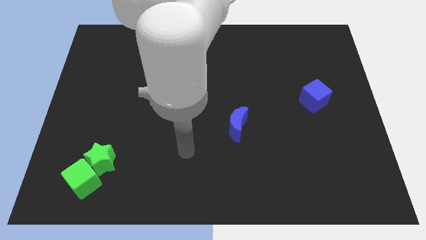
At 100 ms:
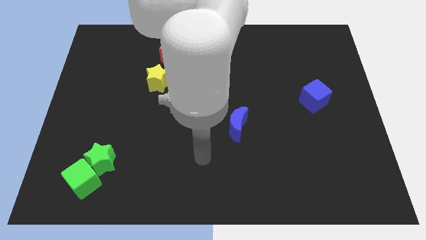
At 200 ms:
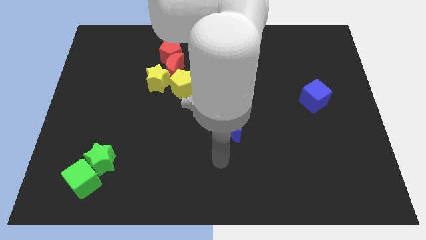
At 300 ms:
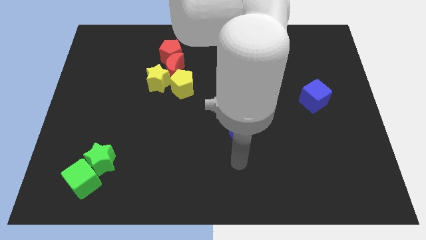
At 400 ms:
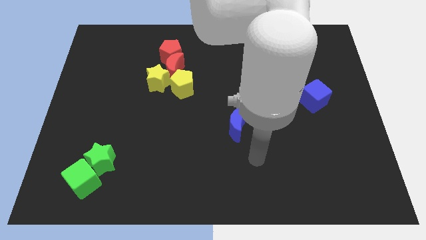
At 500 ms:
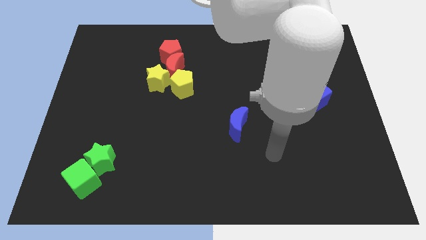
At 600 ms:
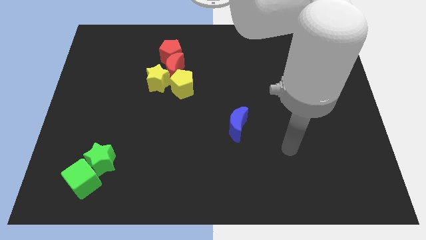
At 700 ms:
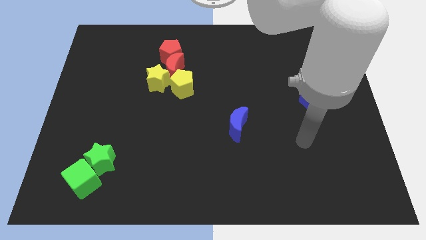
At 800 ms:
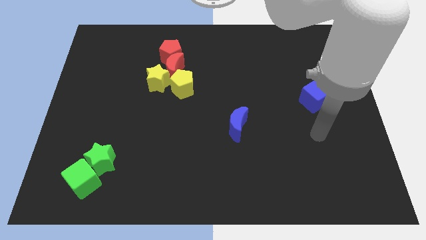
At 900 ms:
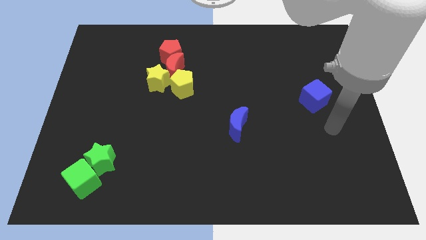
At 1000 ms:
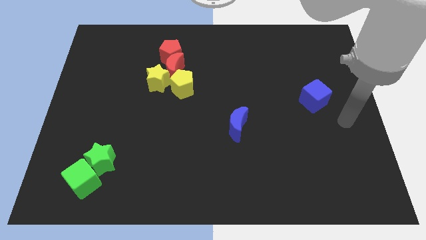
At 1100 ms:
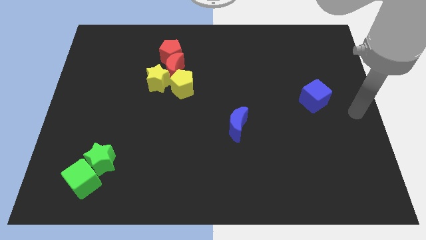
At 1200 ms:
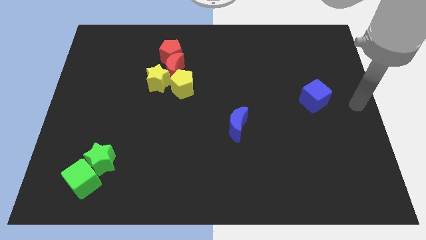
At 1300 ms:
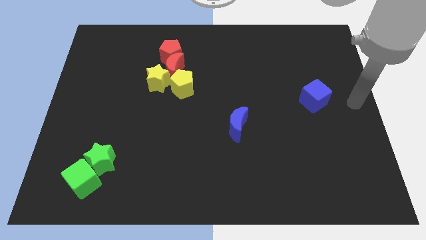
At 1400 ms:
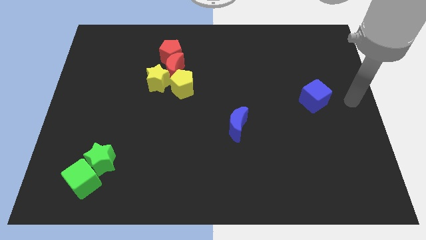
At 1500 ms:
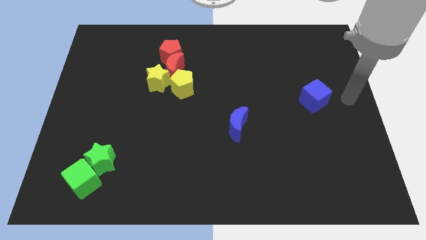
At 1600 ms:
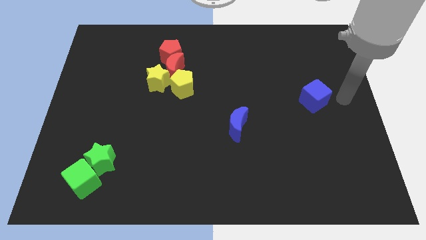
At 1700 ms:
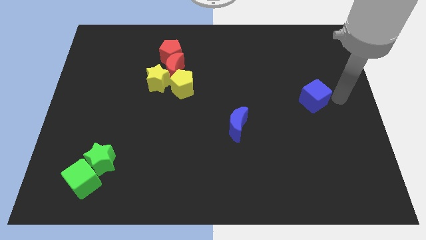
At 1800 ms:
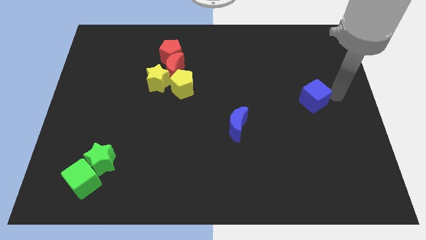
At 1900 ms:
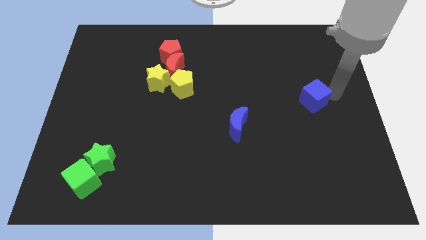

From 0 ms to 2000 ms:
move your arm towards the blue cube

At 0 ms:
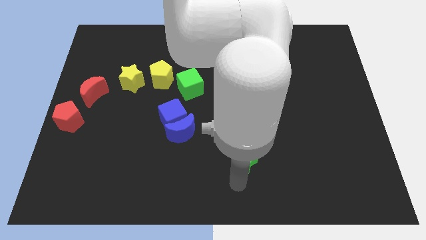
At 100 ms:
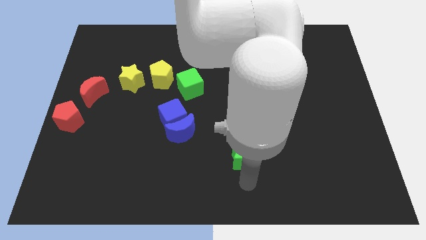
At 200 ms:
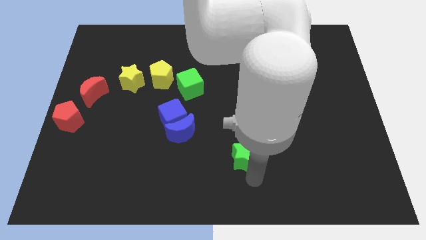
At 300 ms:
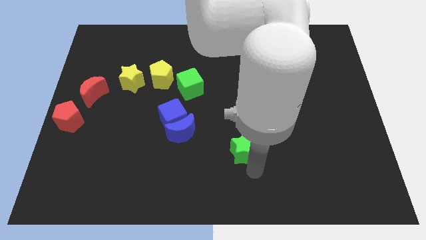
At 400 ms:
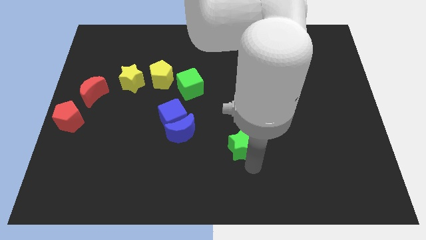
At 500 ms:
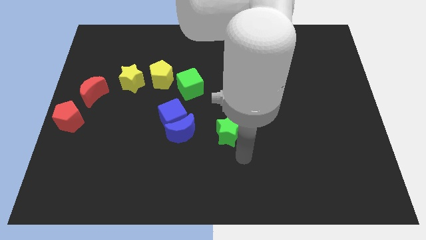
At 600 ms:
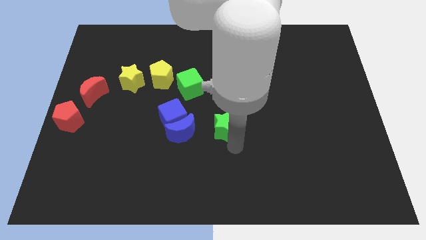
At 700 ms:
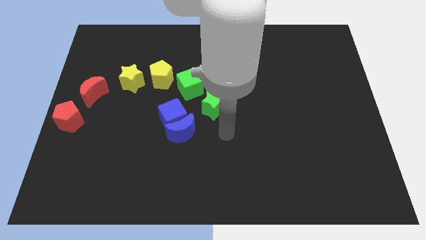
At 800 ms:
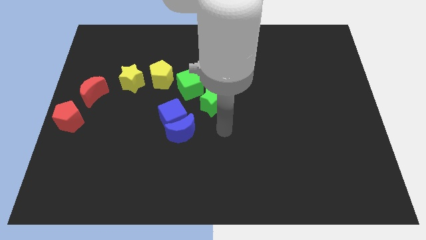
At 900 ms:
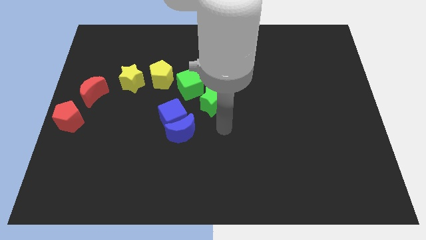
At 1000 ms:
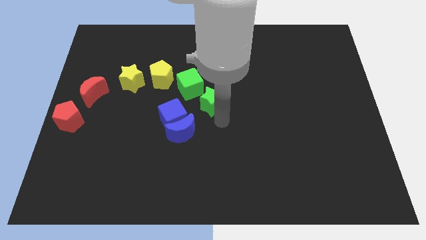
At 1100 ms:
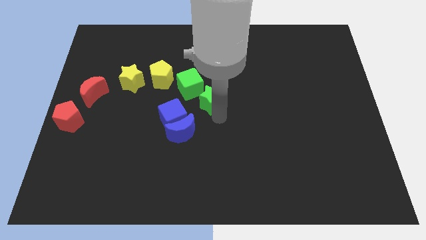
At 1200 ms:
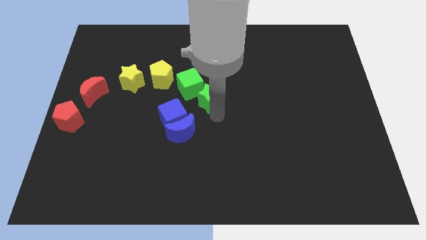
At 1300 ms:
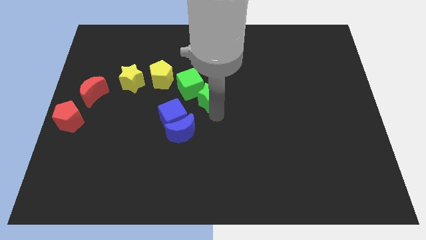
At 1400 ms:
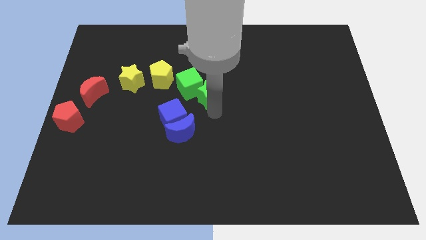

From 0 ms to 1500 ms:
push the green star into the green cube

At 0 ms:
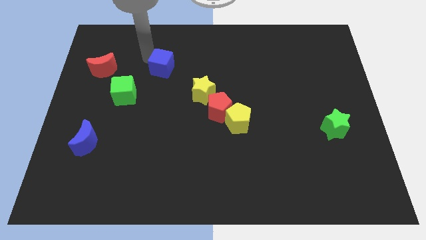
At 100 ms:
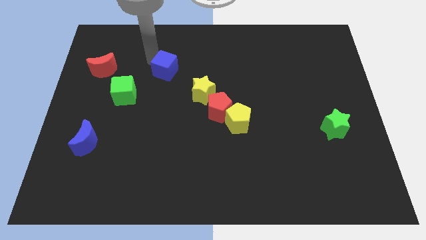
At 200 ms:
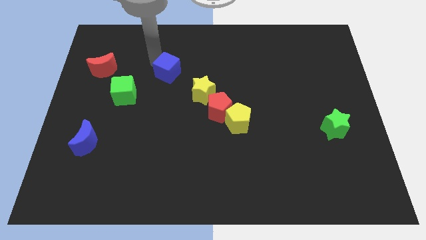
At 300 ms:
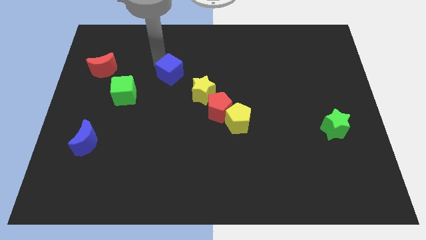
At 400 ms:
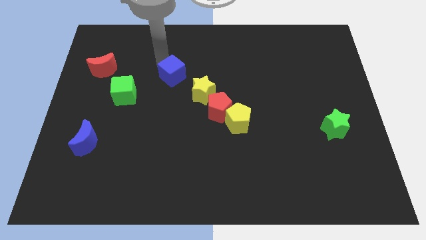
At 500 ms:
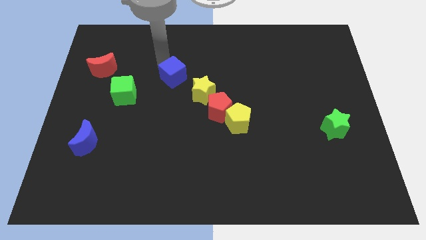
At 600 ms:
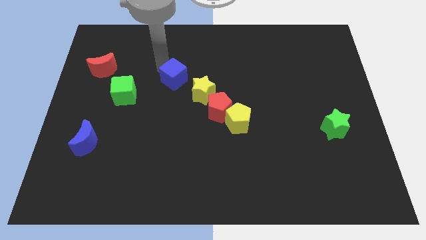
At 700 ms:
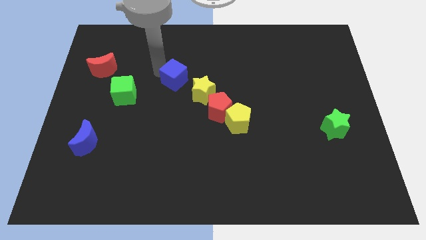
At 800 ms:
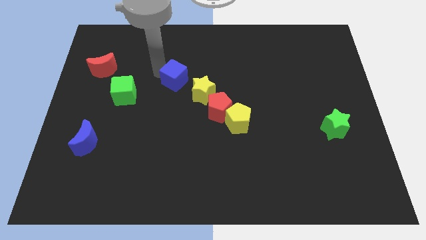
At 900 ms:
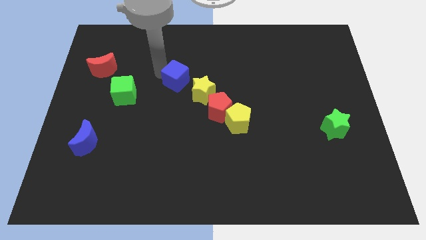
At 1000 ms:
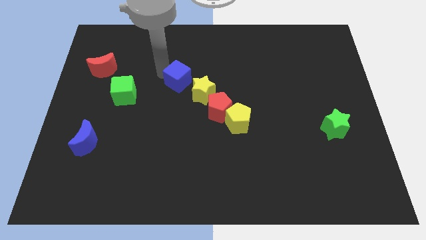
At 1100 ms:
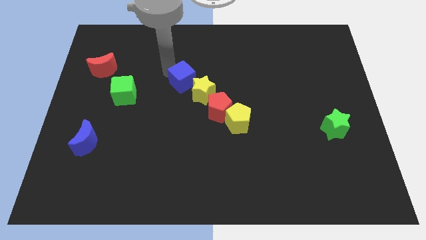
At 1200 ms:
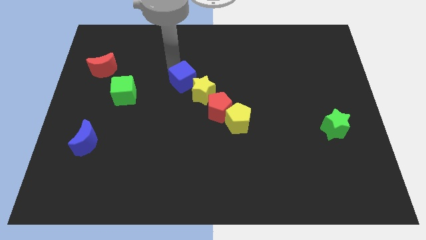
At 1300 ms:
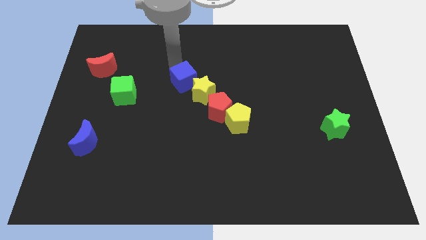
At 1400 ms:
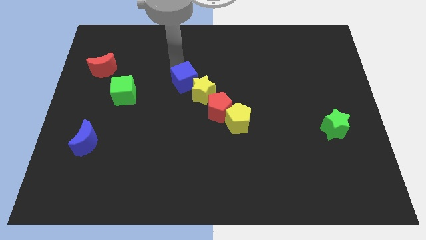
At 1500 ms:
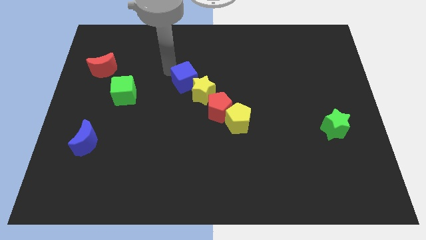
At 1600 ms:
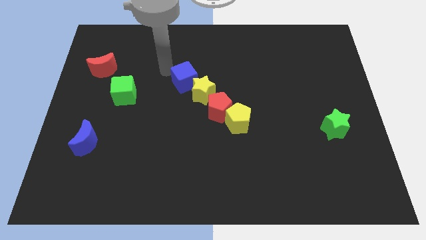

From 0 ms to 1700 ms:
move the blue cube towards the yellow star

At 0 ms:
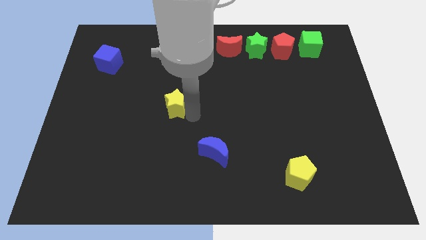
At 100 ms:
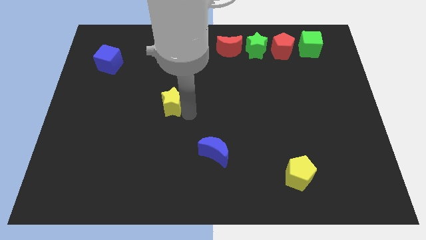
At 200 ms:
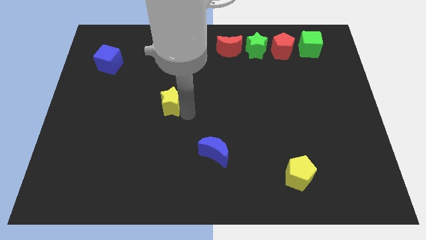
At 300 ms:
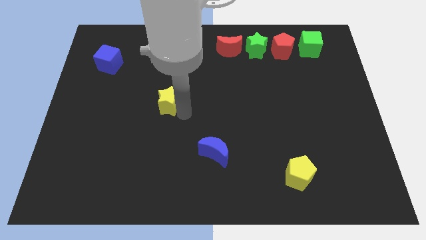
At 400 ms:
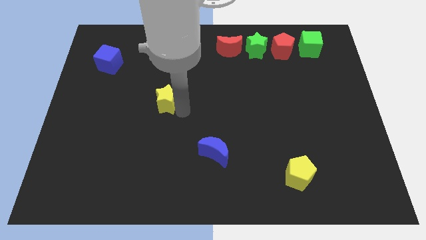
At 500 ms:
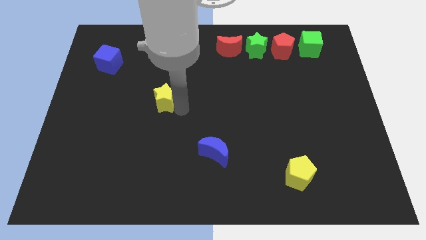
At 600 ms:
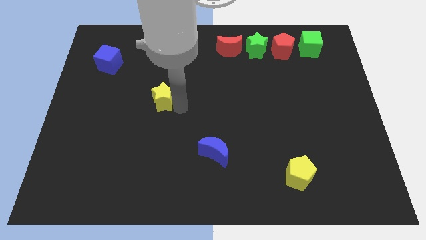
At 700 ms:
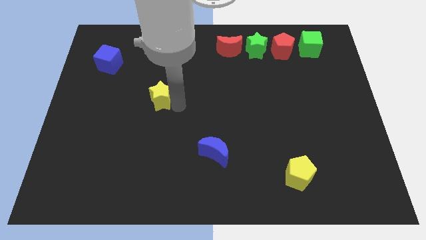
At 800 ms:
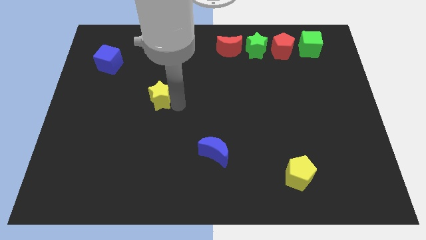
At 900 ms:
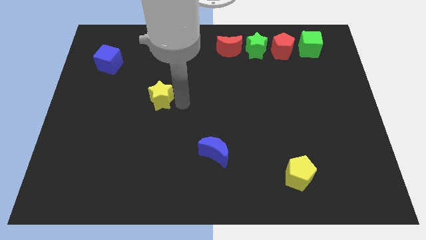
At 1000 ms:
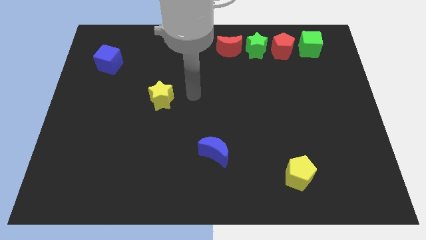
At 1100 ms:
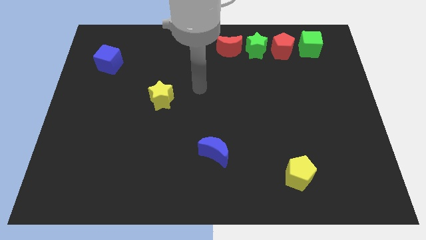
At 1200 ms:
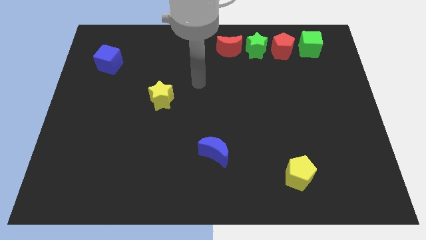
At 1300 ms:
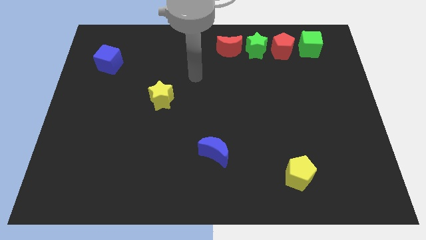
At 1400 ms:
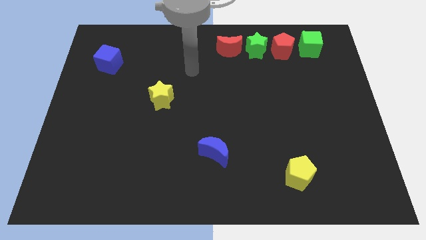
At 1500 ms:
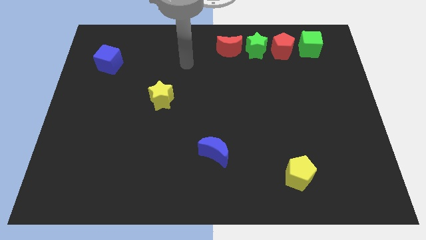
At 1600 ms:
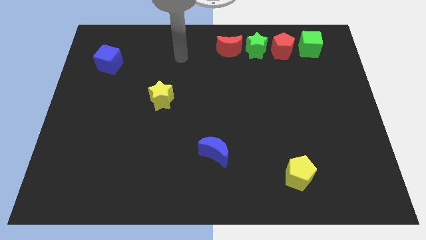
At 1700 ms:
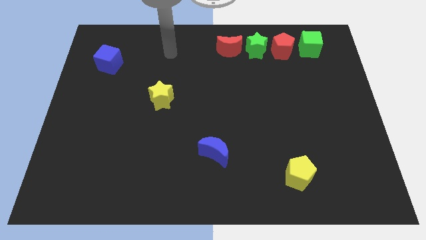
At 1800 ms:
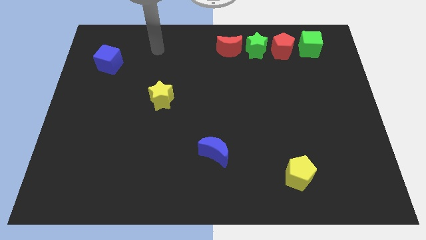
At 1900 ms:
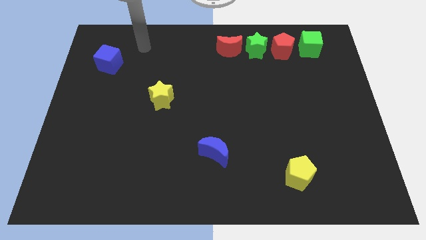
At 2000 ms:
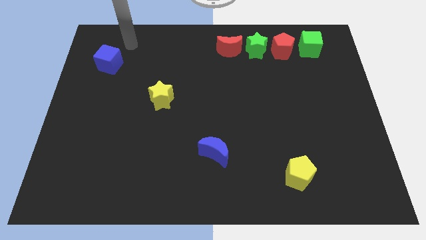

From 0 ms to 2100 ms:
place yellow star between blue cube and crescent

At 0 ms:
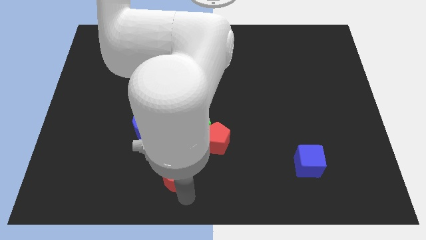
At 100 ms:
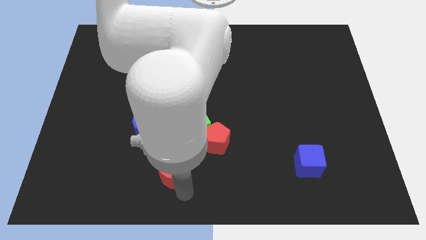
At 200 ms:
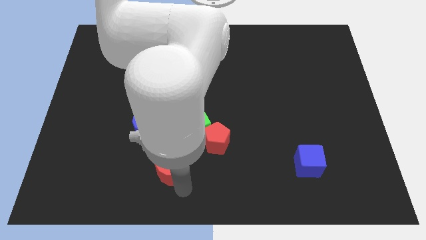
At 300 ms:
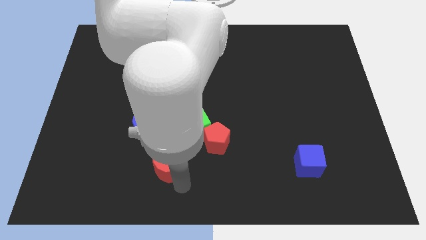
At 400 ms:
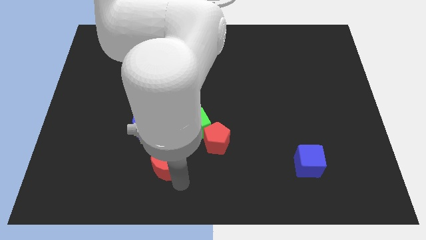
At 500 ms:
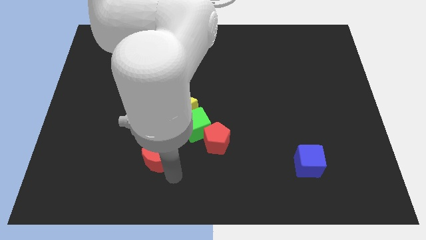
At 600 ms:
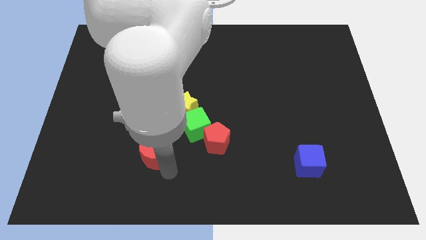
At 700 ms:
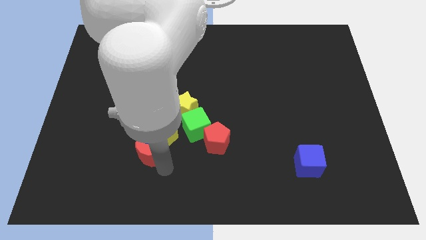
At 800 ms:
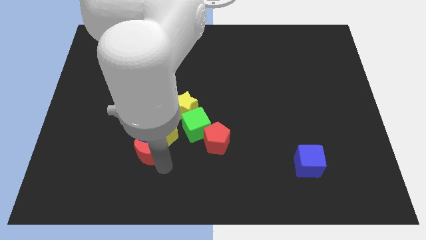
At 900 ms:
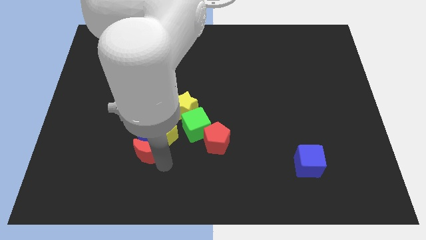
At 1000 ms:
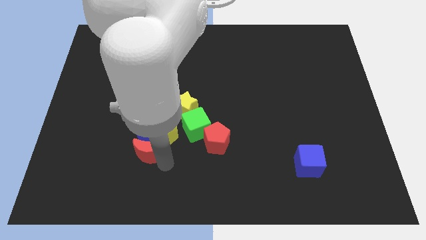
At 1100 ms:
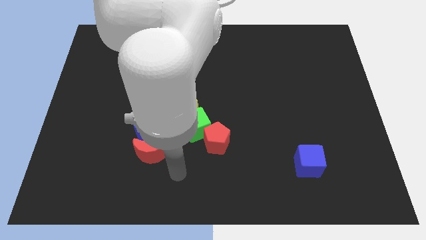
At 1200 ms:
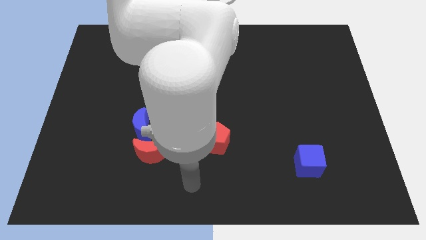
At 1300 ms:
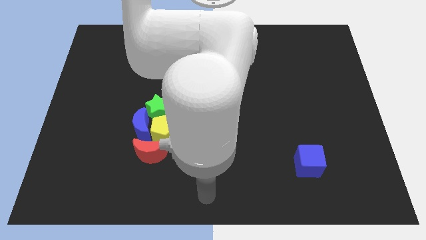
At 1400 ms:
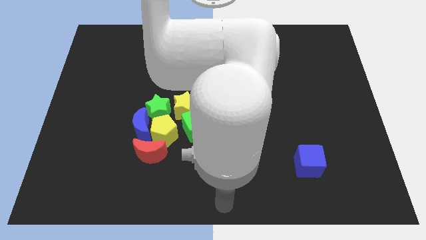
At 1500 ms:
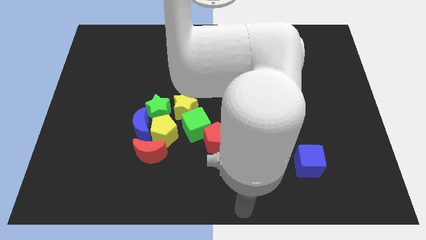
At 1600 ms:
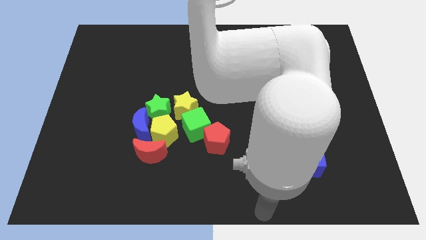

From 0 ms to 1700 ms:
push the red crescent into the group of blocks

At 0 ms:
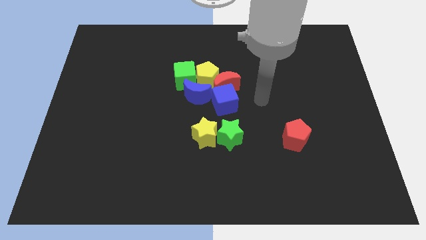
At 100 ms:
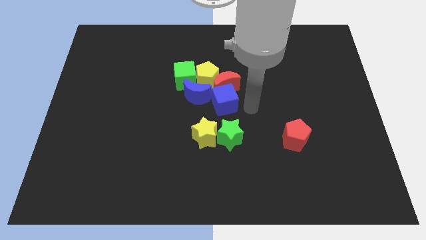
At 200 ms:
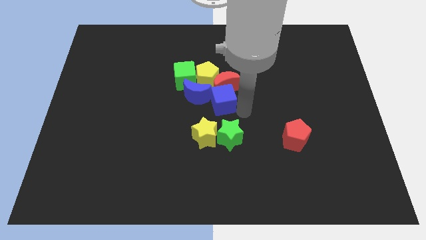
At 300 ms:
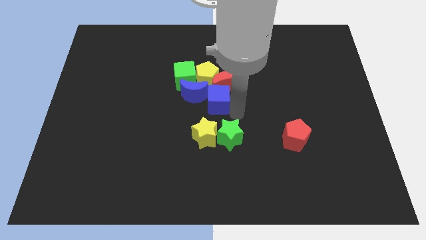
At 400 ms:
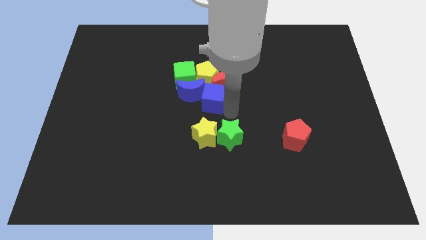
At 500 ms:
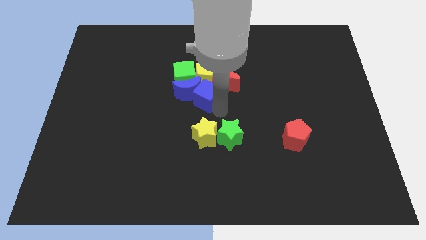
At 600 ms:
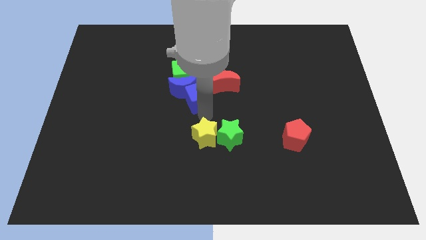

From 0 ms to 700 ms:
push the blue cube into the blue crescent
